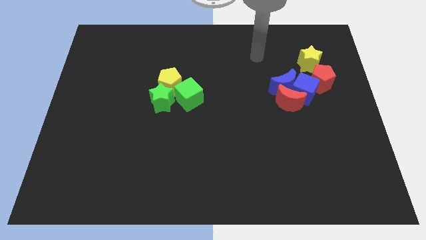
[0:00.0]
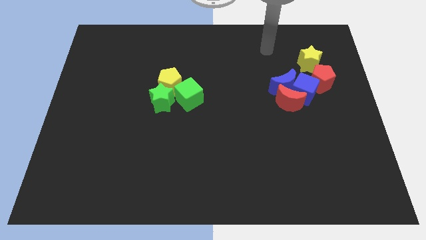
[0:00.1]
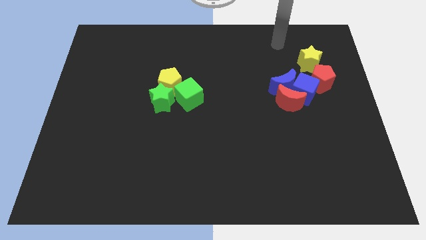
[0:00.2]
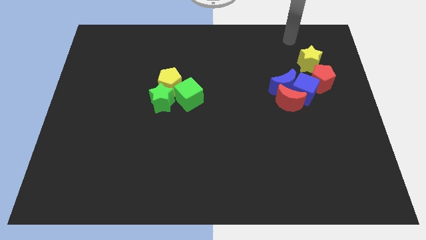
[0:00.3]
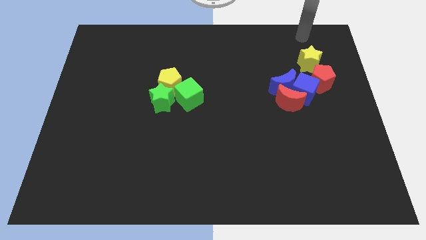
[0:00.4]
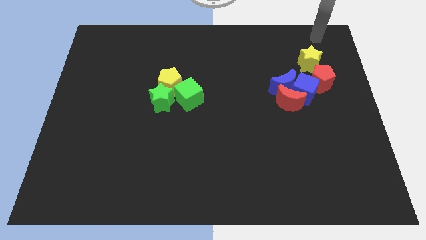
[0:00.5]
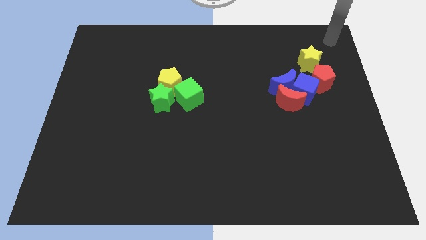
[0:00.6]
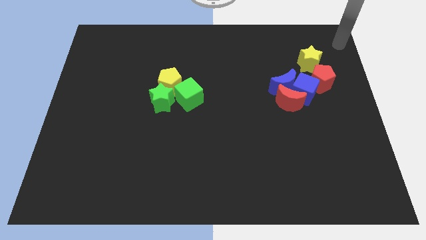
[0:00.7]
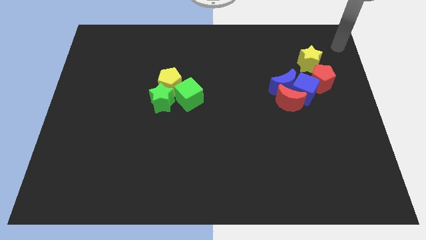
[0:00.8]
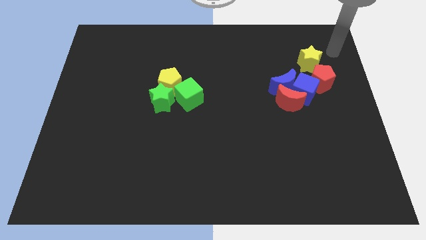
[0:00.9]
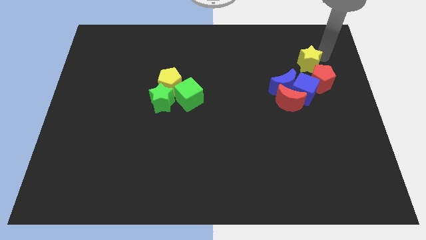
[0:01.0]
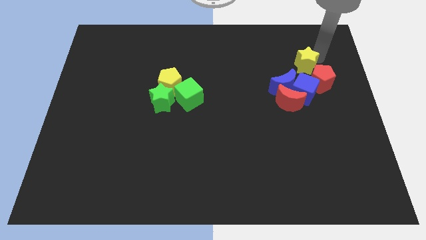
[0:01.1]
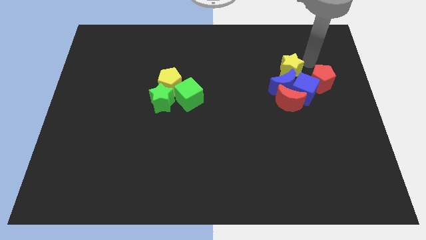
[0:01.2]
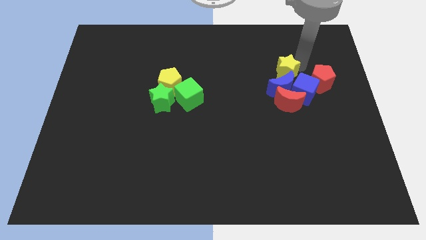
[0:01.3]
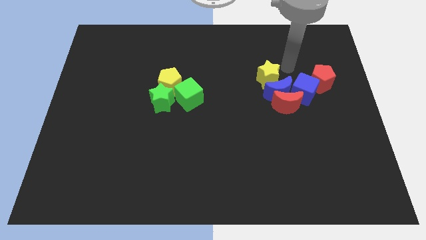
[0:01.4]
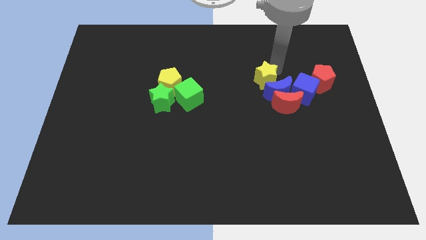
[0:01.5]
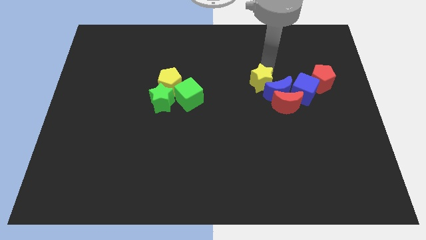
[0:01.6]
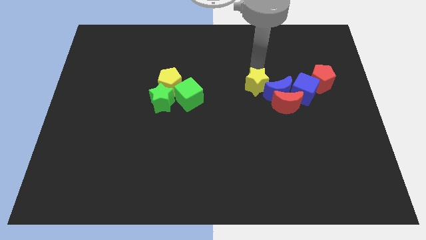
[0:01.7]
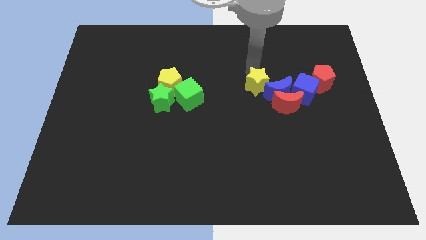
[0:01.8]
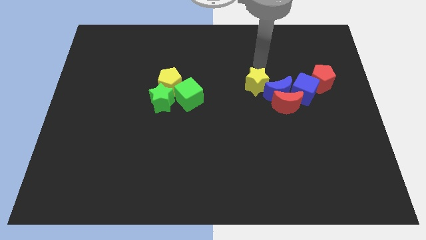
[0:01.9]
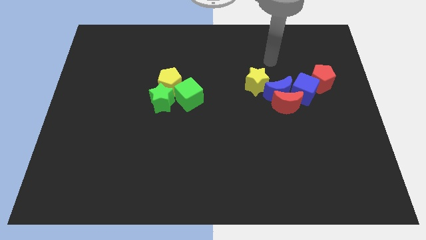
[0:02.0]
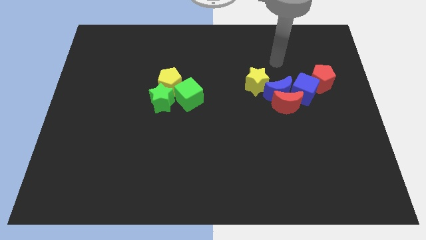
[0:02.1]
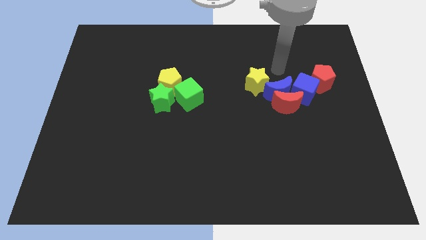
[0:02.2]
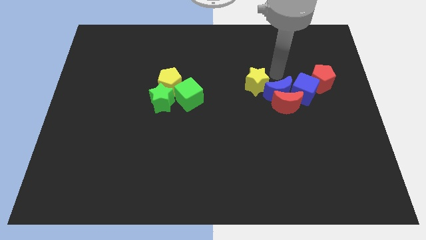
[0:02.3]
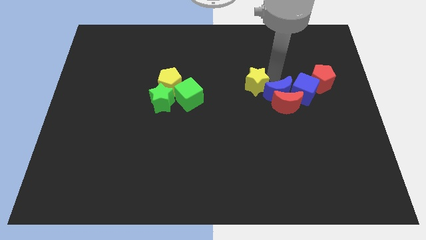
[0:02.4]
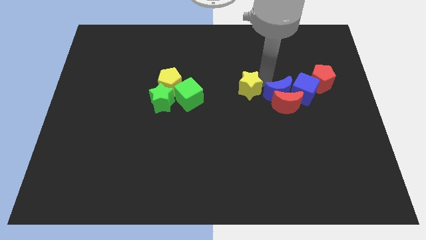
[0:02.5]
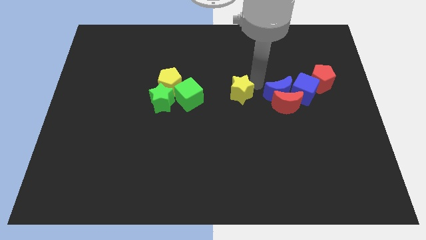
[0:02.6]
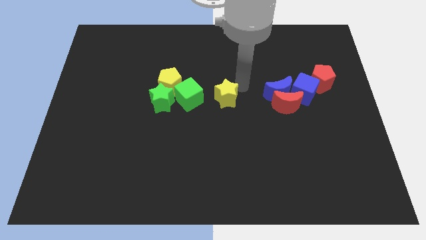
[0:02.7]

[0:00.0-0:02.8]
place the yellow star to the right of thee green cube

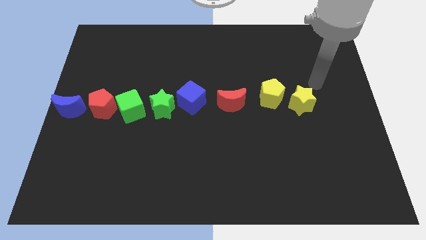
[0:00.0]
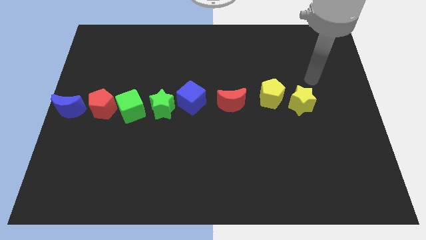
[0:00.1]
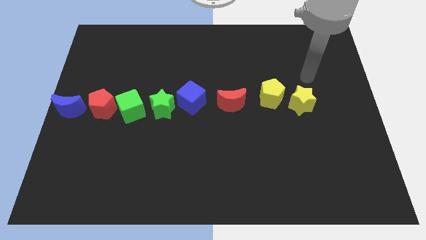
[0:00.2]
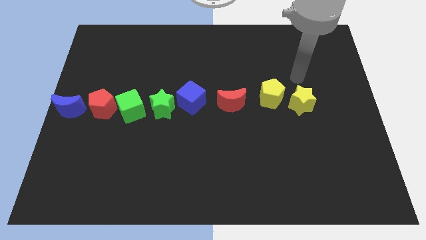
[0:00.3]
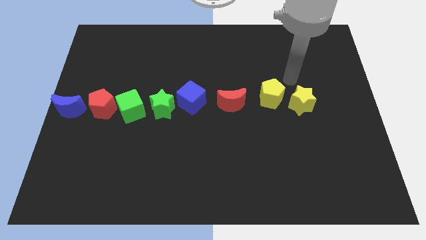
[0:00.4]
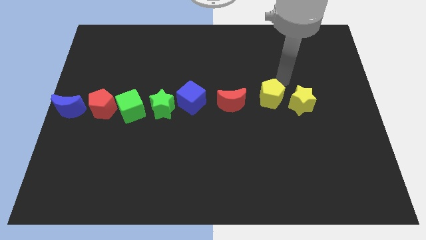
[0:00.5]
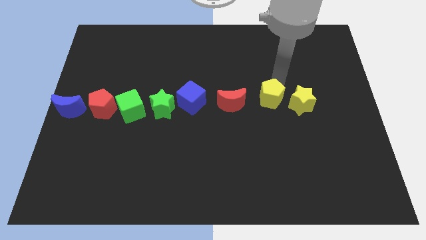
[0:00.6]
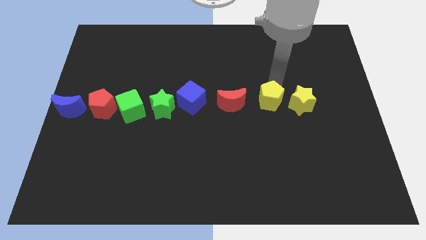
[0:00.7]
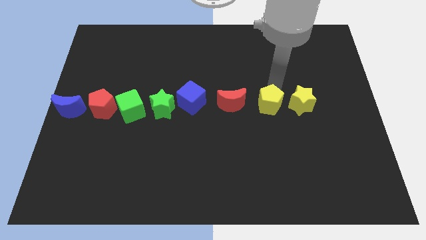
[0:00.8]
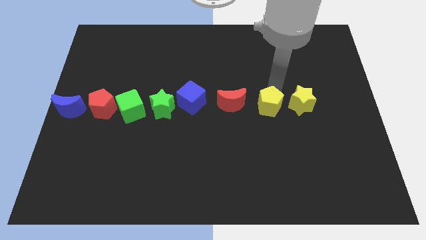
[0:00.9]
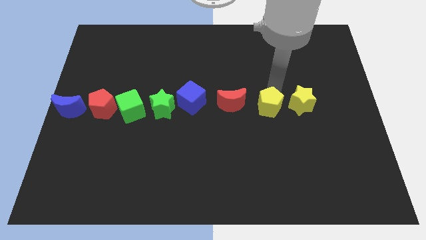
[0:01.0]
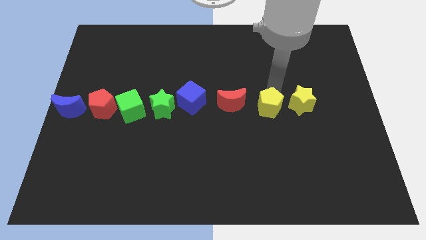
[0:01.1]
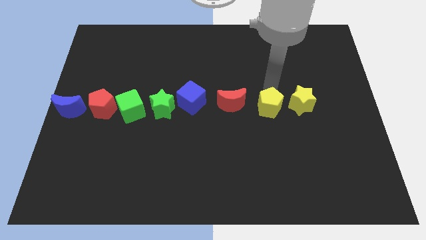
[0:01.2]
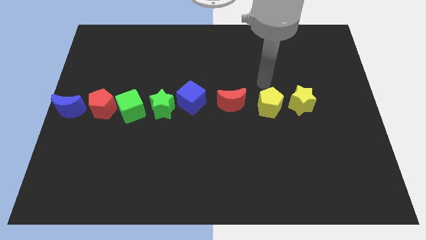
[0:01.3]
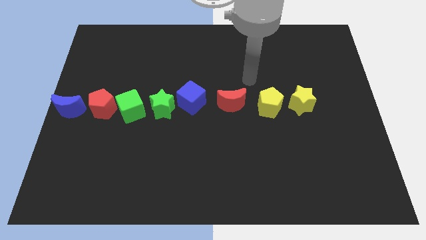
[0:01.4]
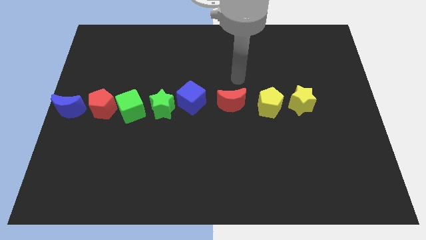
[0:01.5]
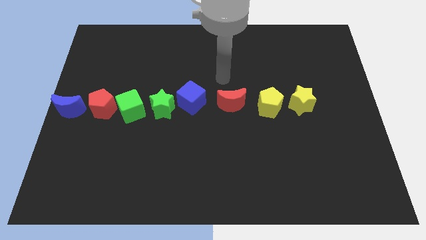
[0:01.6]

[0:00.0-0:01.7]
push the yellow pentagon in between the red crescent and yellow star

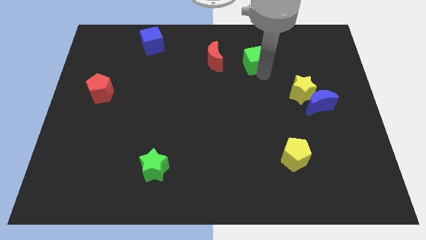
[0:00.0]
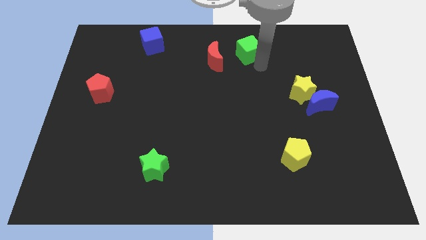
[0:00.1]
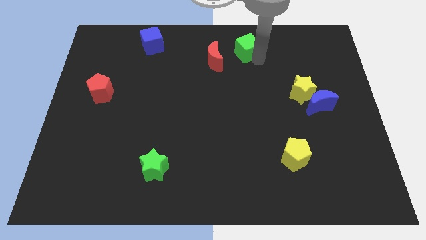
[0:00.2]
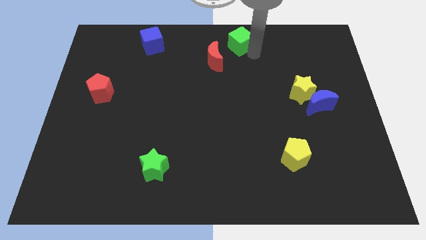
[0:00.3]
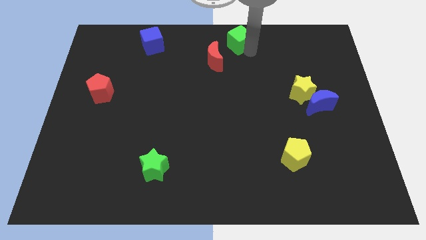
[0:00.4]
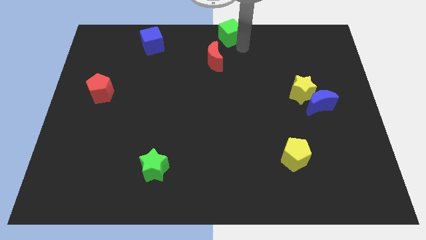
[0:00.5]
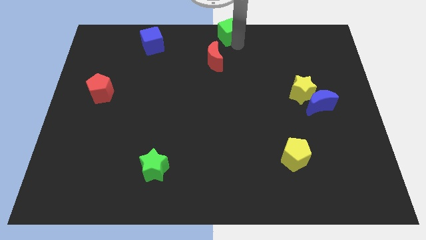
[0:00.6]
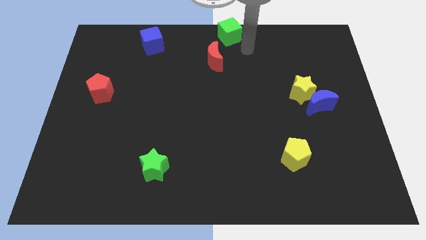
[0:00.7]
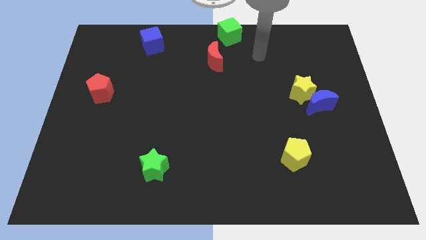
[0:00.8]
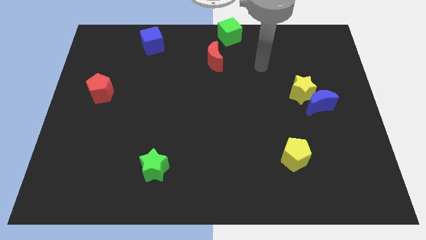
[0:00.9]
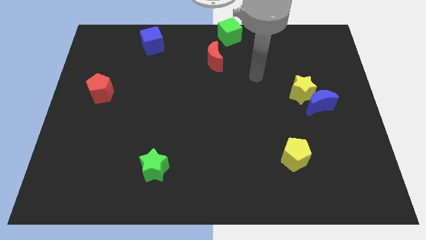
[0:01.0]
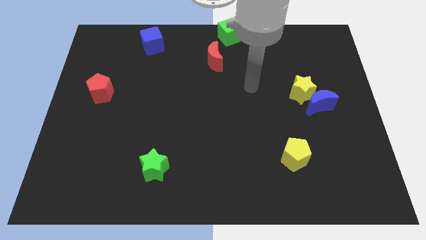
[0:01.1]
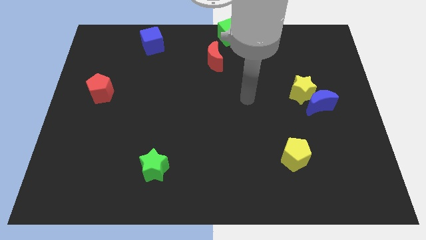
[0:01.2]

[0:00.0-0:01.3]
move green cube right above red moon

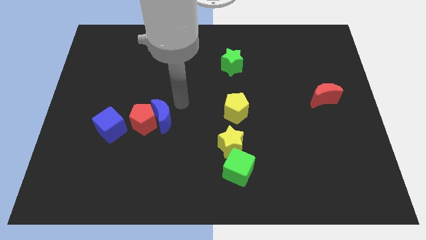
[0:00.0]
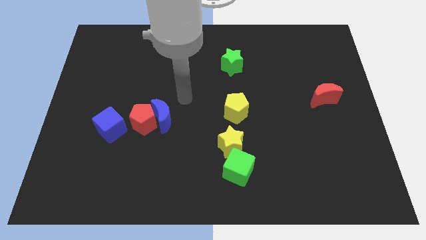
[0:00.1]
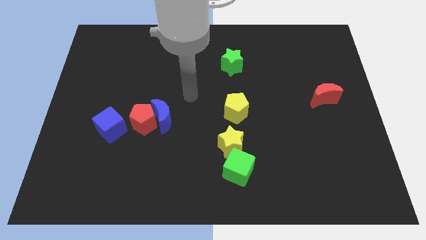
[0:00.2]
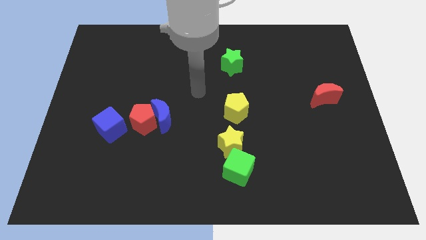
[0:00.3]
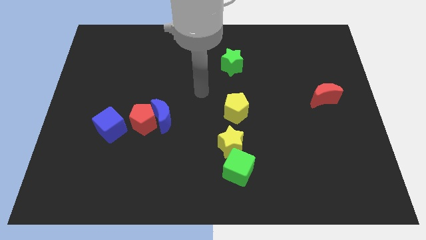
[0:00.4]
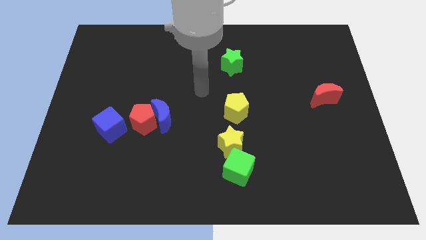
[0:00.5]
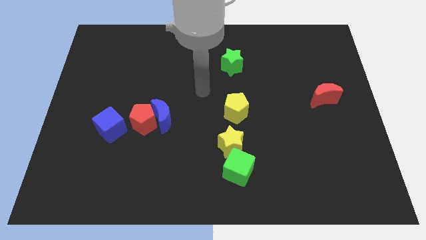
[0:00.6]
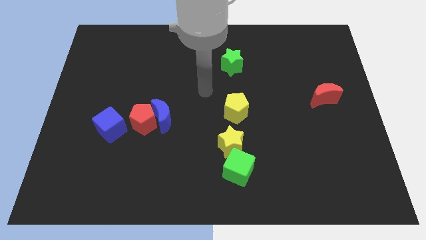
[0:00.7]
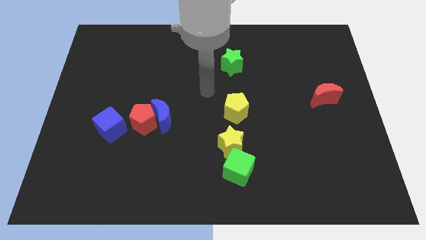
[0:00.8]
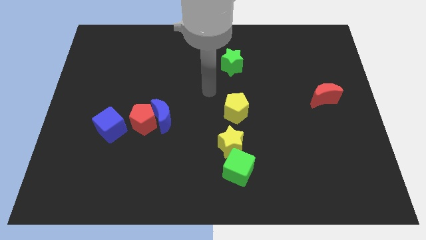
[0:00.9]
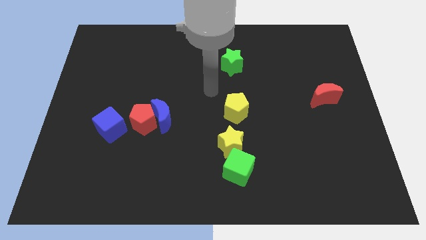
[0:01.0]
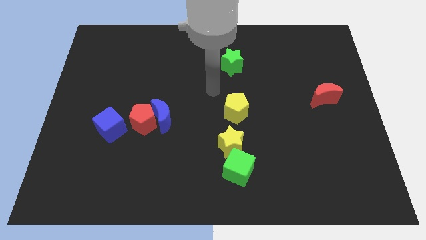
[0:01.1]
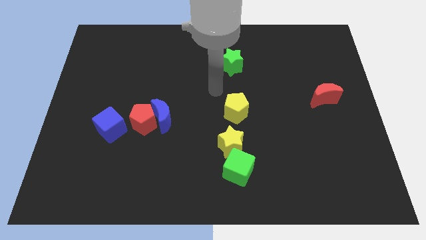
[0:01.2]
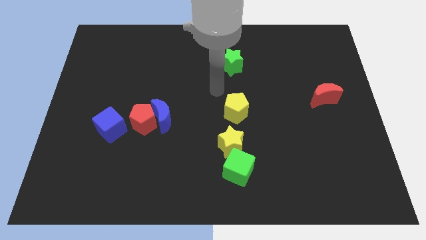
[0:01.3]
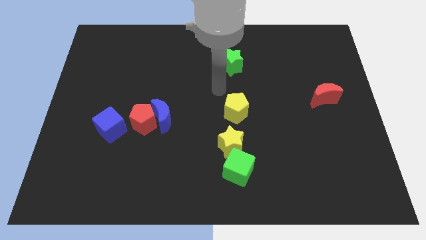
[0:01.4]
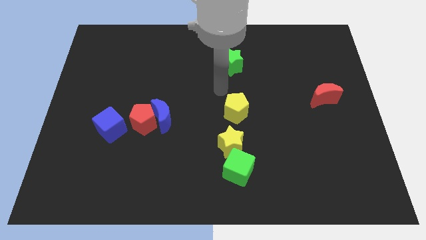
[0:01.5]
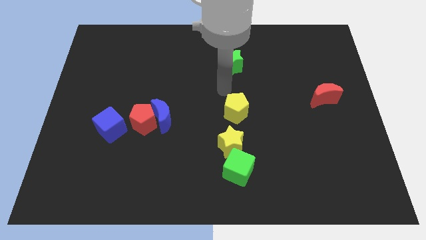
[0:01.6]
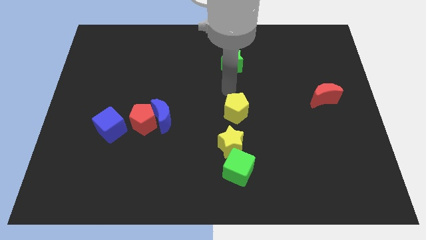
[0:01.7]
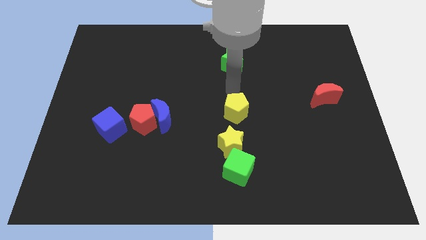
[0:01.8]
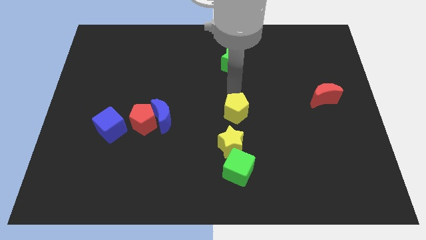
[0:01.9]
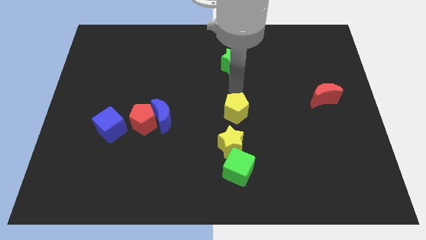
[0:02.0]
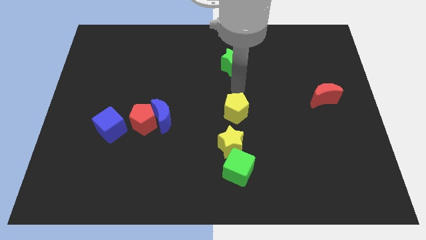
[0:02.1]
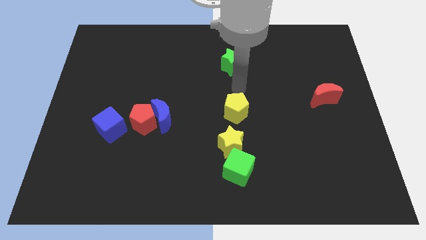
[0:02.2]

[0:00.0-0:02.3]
point your hand at the top side of the yellow pentagon

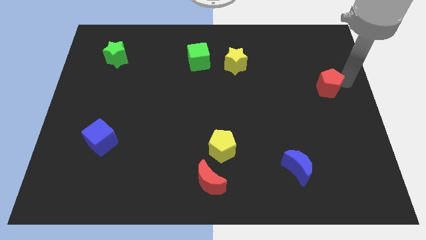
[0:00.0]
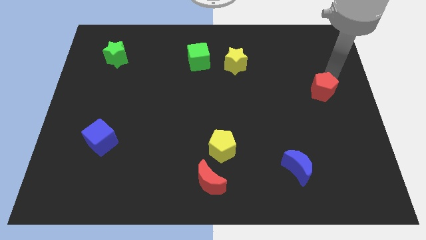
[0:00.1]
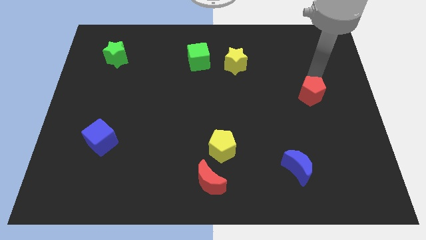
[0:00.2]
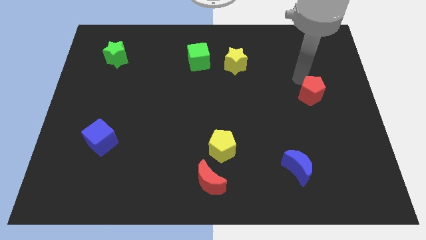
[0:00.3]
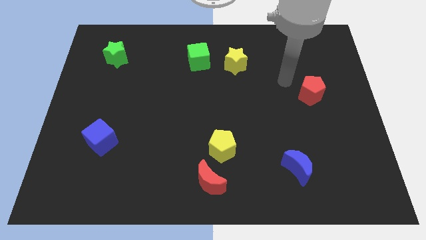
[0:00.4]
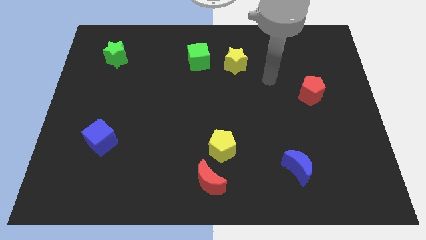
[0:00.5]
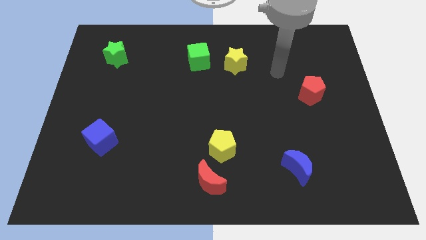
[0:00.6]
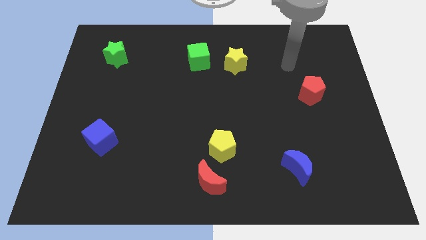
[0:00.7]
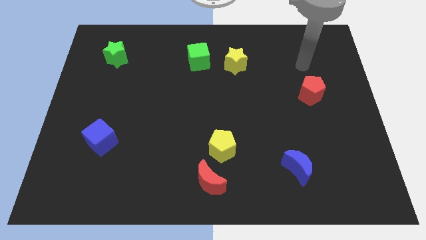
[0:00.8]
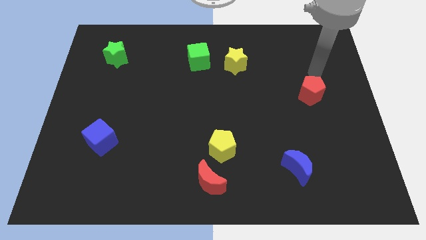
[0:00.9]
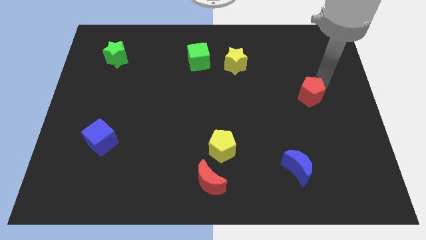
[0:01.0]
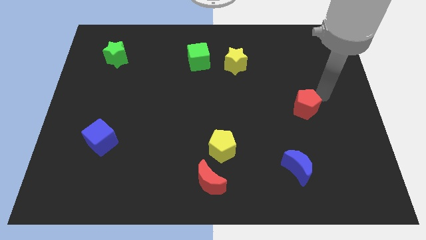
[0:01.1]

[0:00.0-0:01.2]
slightly move the red pentagon to the bottom side
